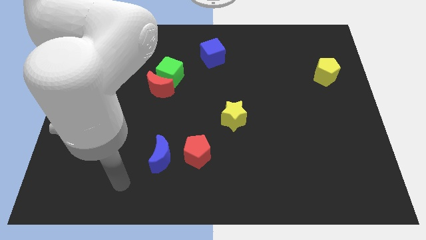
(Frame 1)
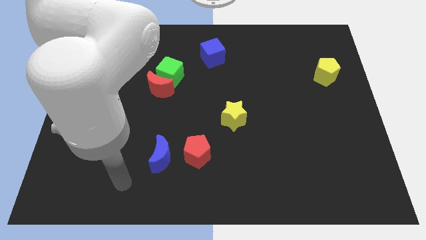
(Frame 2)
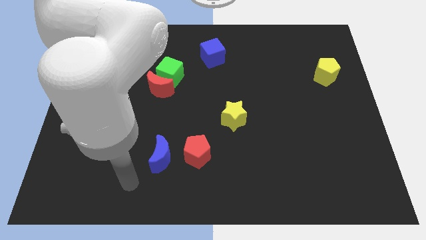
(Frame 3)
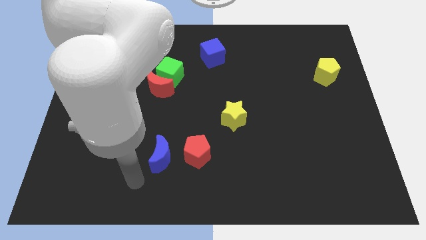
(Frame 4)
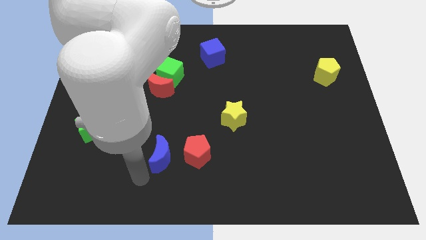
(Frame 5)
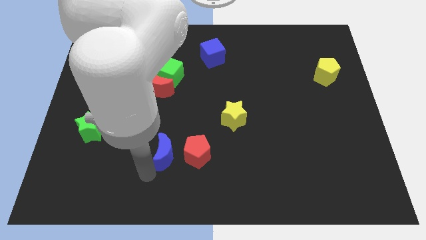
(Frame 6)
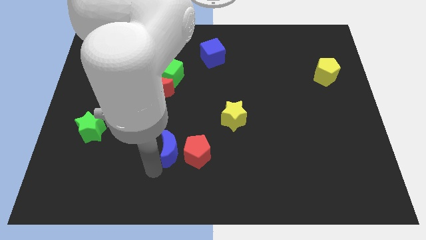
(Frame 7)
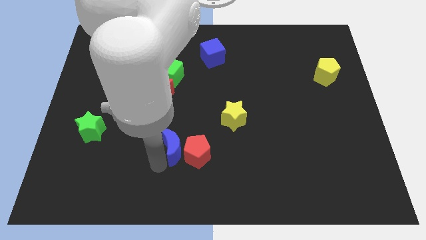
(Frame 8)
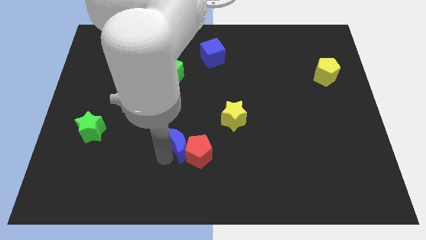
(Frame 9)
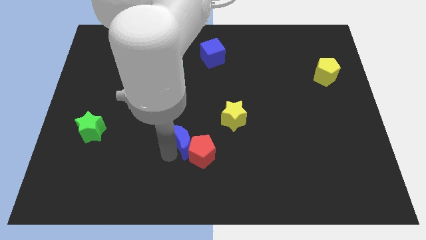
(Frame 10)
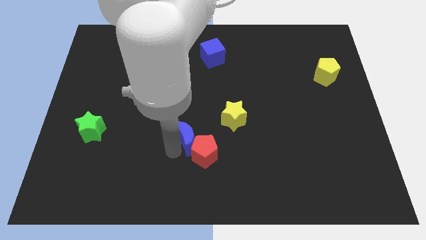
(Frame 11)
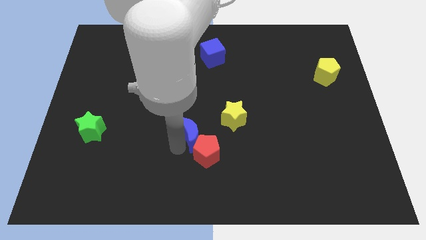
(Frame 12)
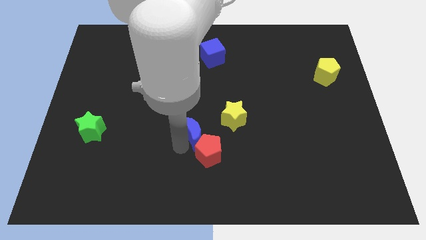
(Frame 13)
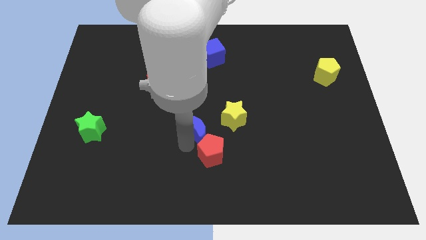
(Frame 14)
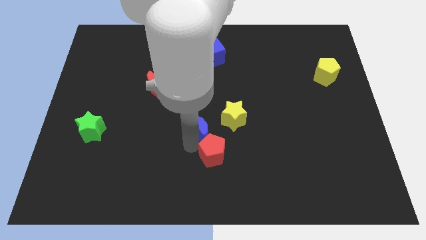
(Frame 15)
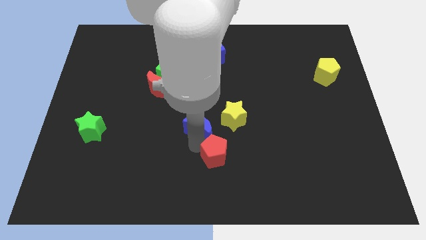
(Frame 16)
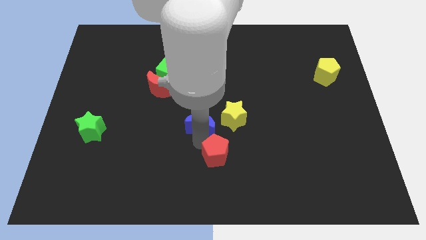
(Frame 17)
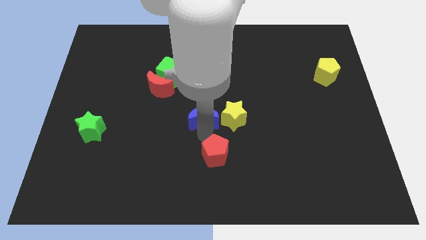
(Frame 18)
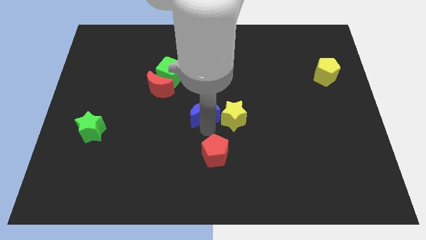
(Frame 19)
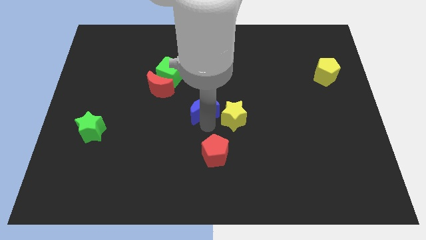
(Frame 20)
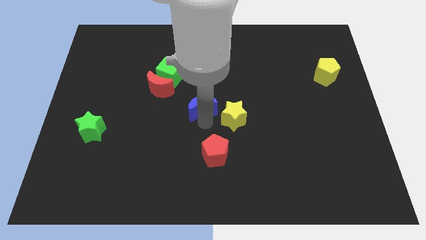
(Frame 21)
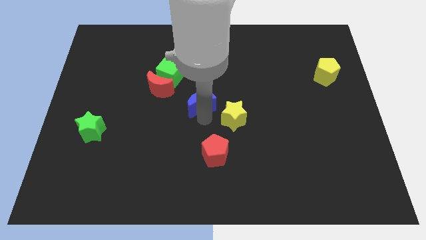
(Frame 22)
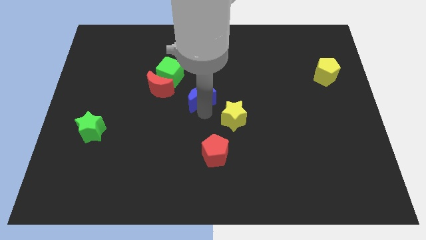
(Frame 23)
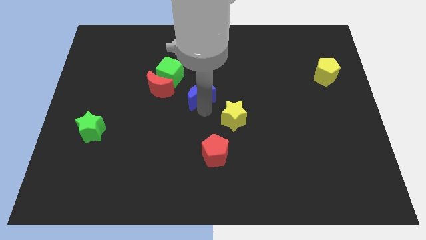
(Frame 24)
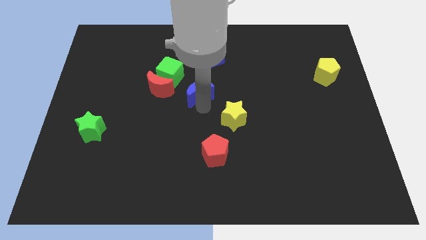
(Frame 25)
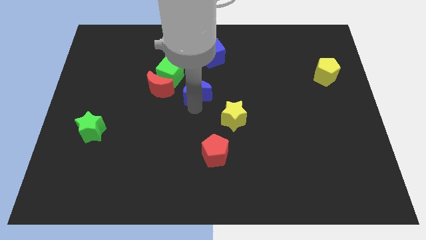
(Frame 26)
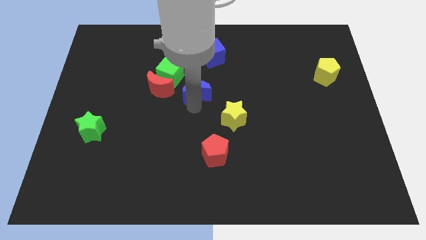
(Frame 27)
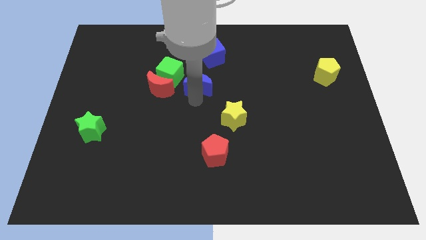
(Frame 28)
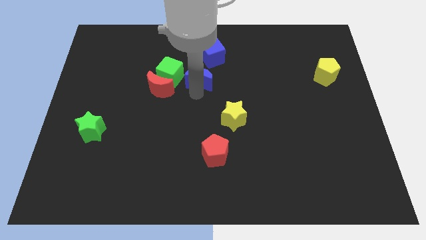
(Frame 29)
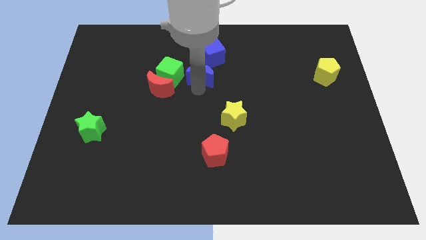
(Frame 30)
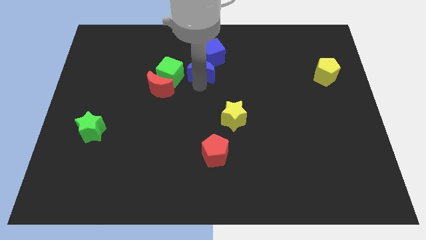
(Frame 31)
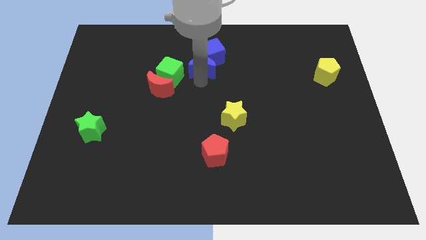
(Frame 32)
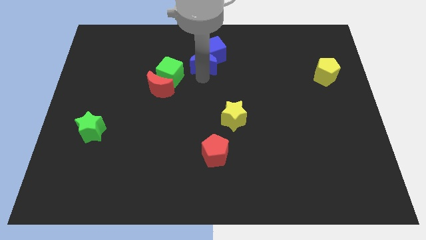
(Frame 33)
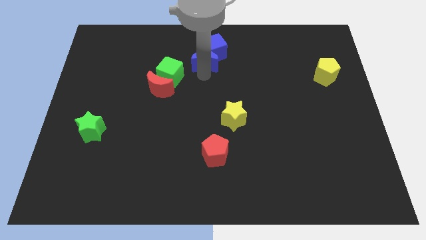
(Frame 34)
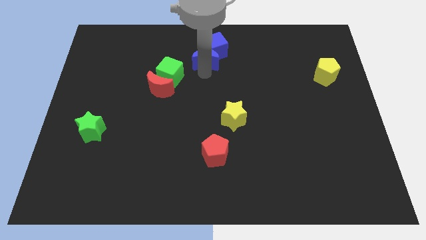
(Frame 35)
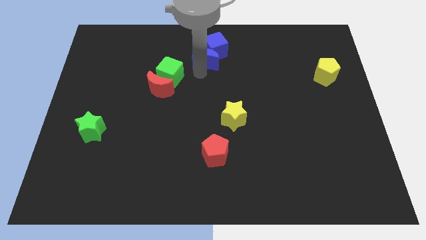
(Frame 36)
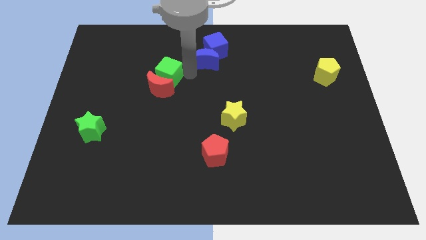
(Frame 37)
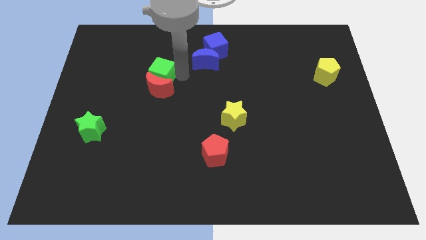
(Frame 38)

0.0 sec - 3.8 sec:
push the blue crescent into the blue cube

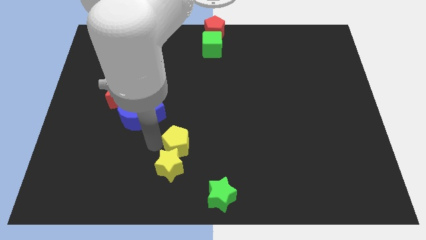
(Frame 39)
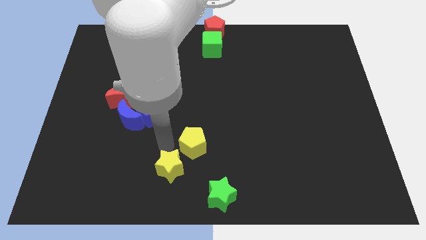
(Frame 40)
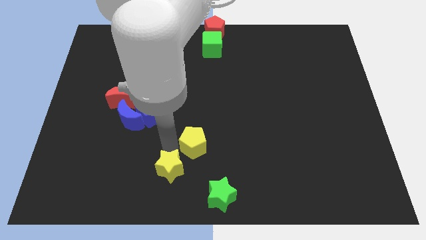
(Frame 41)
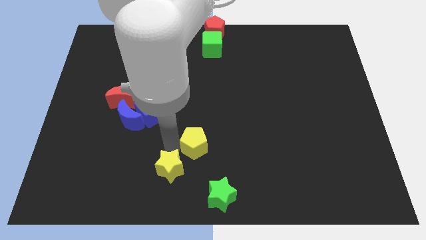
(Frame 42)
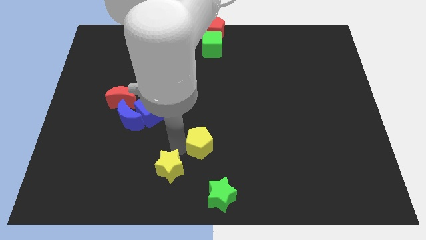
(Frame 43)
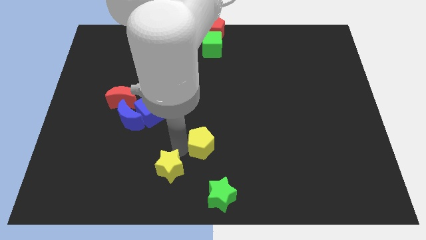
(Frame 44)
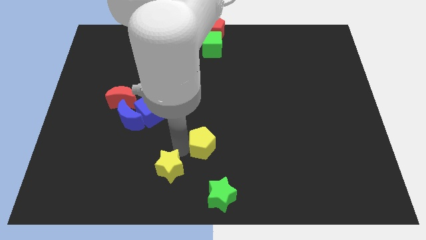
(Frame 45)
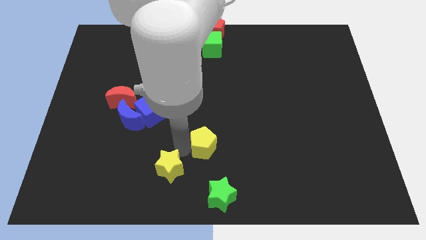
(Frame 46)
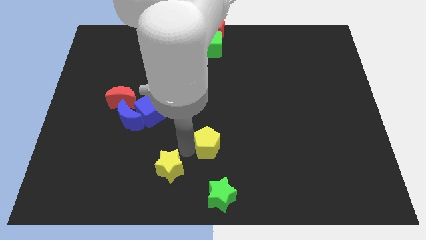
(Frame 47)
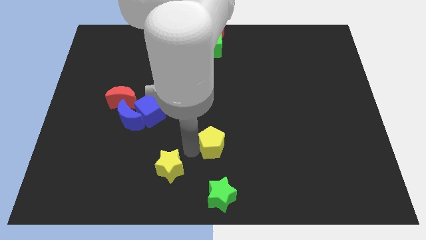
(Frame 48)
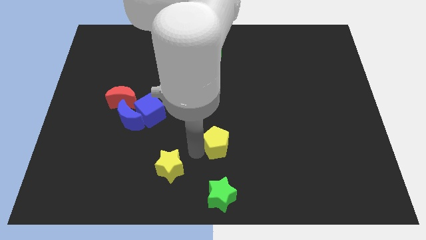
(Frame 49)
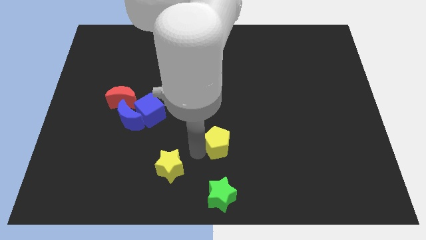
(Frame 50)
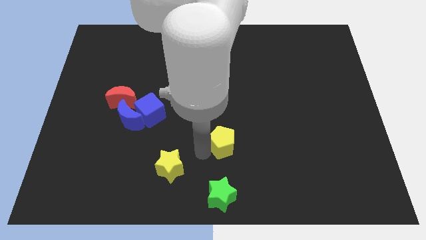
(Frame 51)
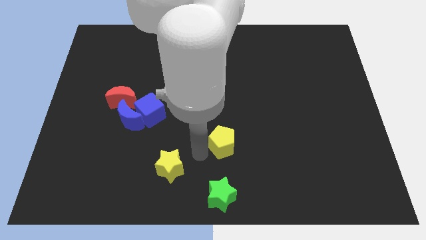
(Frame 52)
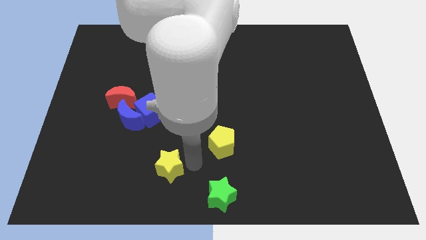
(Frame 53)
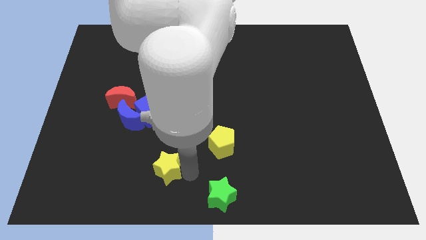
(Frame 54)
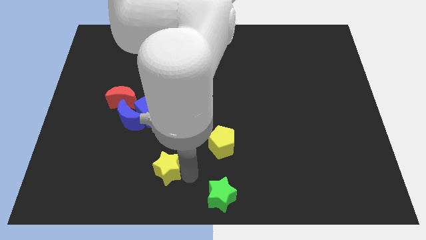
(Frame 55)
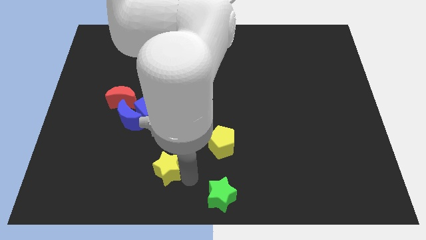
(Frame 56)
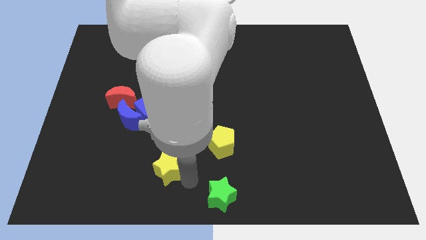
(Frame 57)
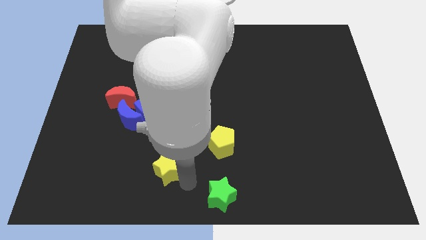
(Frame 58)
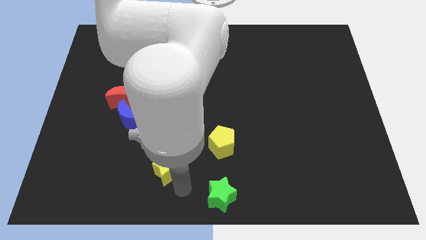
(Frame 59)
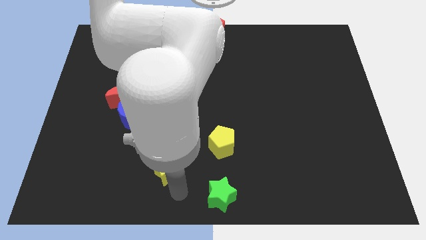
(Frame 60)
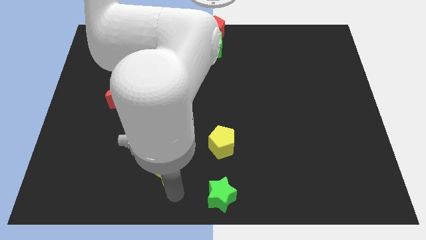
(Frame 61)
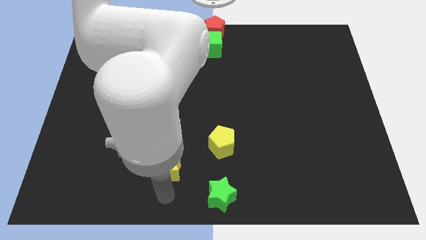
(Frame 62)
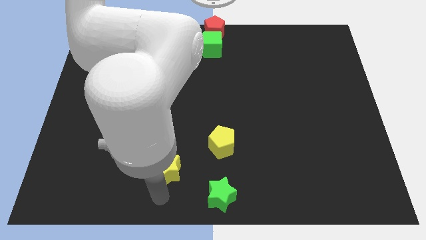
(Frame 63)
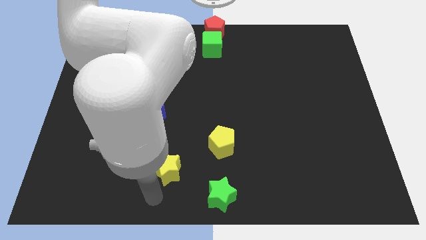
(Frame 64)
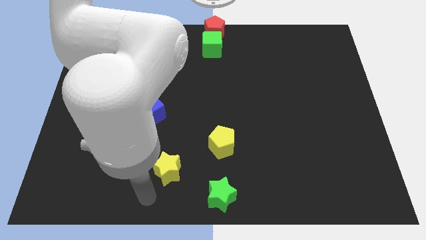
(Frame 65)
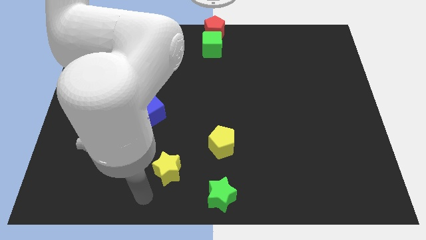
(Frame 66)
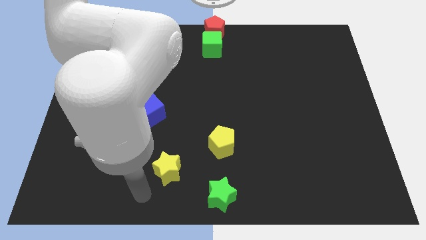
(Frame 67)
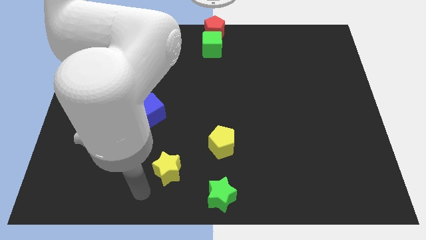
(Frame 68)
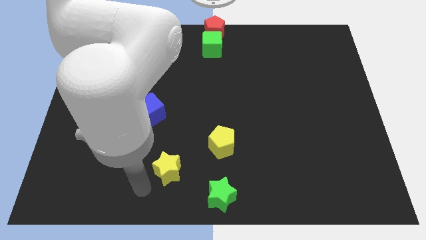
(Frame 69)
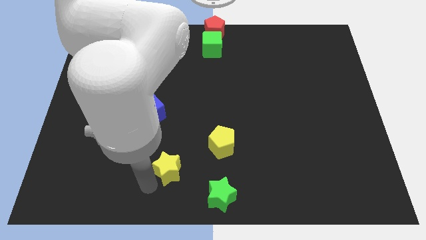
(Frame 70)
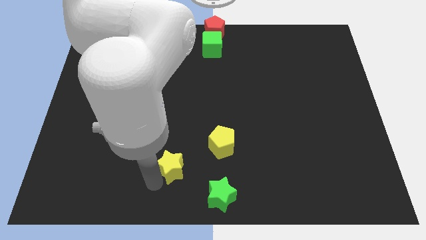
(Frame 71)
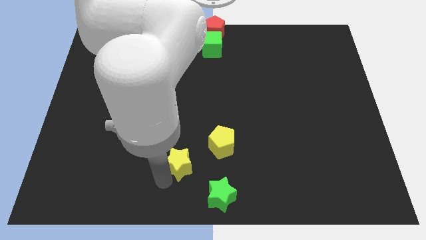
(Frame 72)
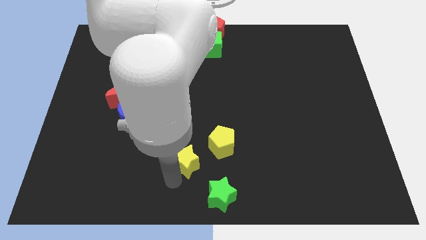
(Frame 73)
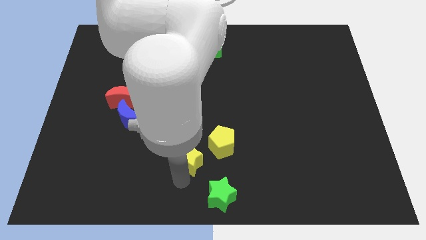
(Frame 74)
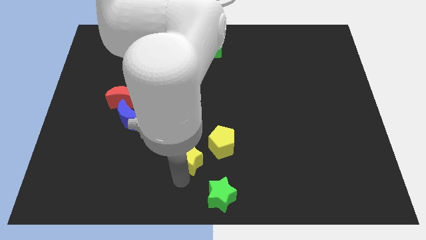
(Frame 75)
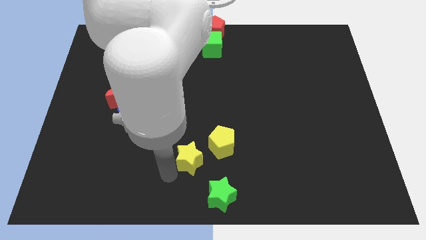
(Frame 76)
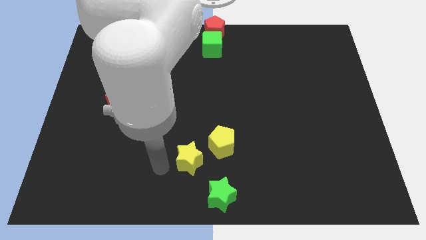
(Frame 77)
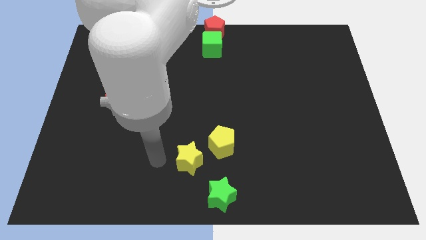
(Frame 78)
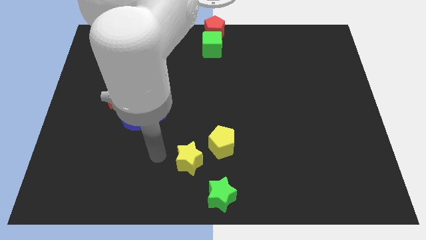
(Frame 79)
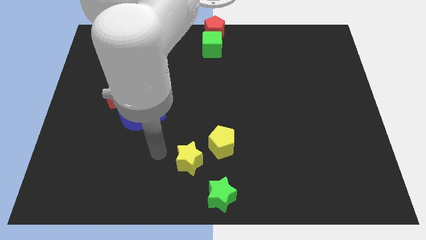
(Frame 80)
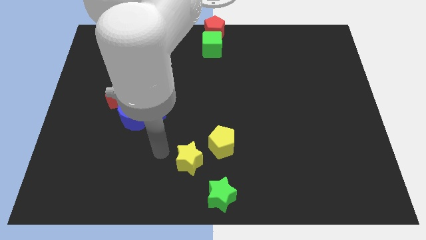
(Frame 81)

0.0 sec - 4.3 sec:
separate the yellow star from the yellow pentagon

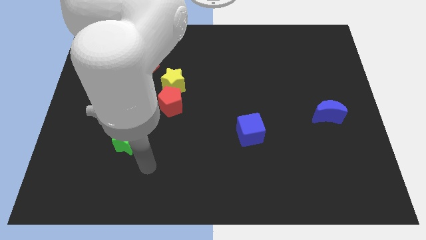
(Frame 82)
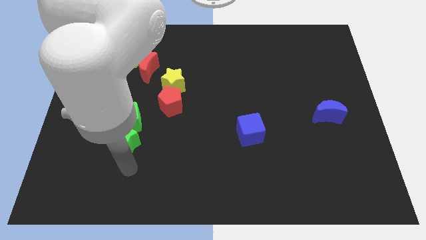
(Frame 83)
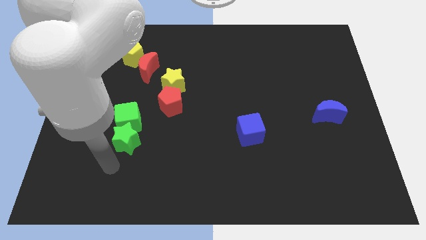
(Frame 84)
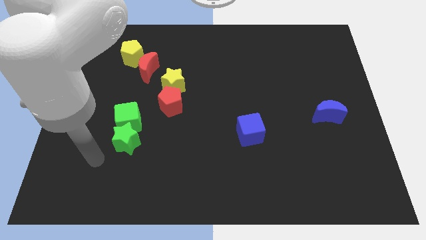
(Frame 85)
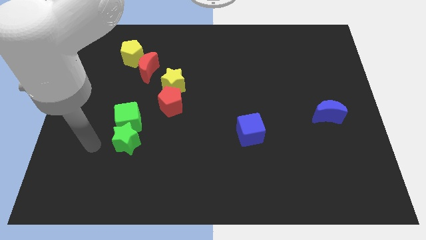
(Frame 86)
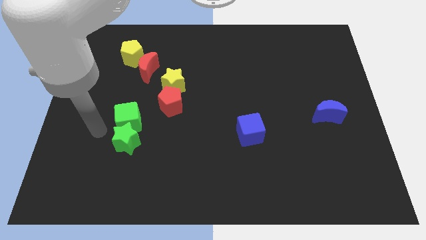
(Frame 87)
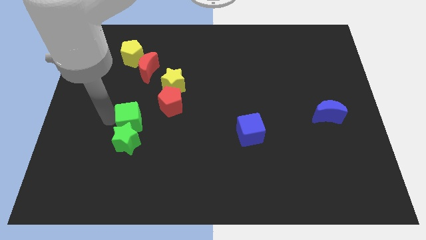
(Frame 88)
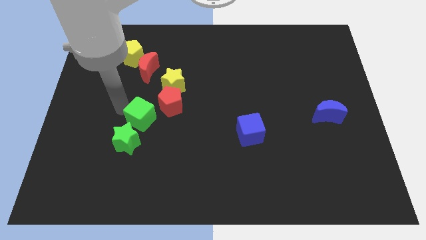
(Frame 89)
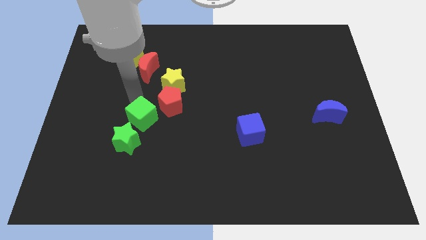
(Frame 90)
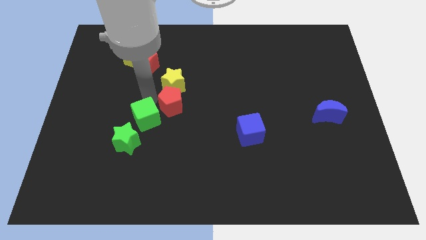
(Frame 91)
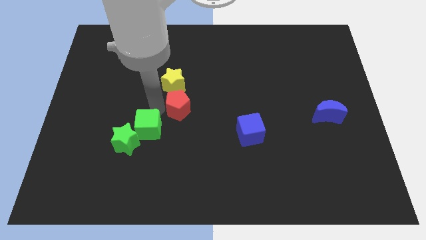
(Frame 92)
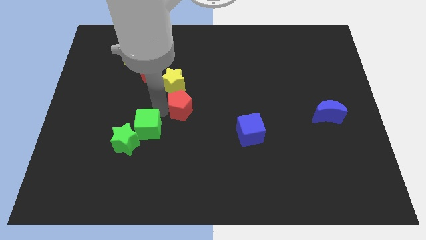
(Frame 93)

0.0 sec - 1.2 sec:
push the green cube to the left of the red pentagon
